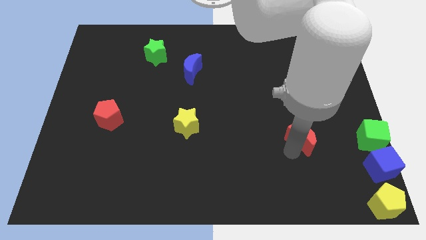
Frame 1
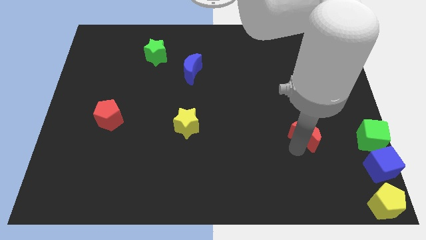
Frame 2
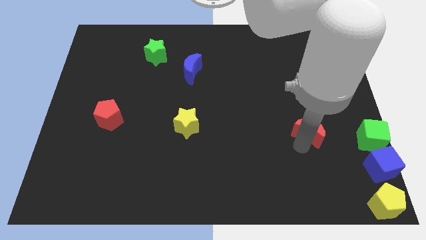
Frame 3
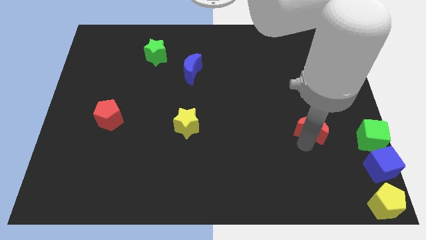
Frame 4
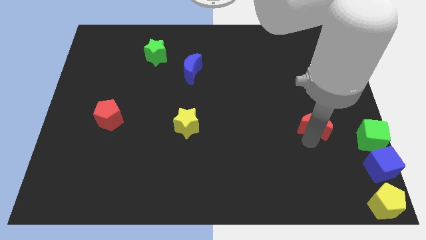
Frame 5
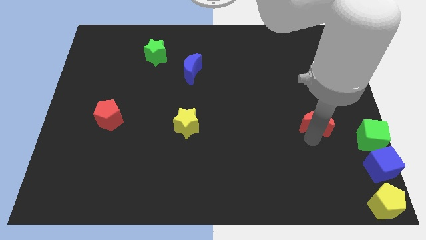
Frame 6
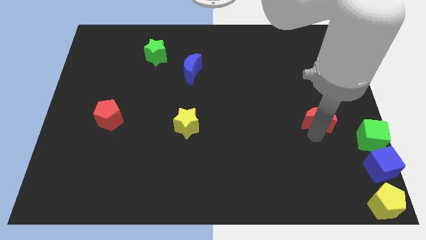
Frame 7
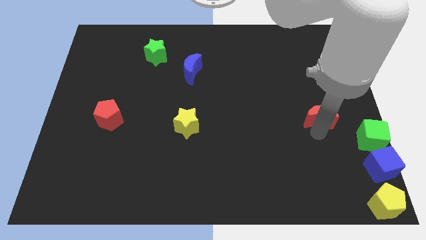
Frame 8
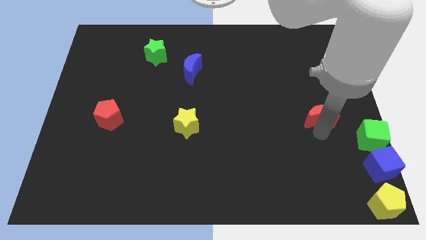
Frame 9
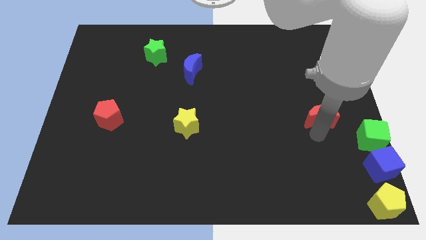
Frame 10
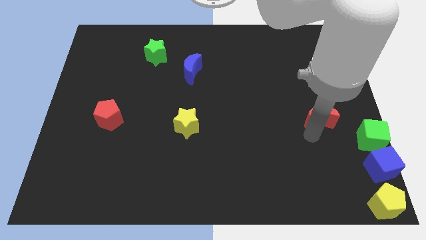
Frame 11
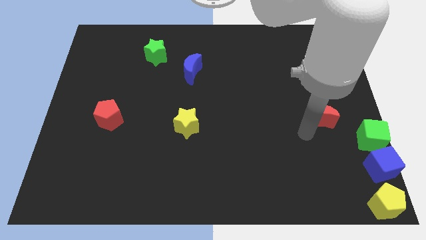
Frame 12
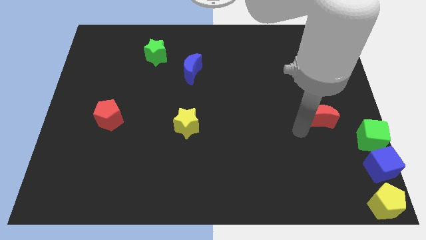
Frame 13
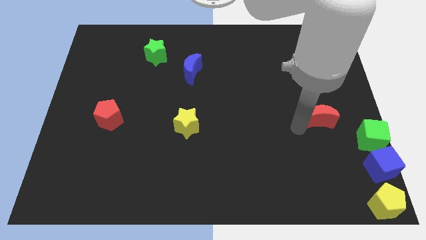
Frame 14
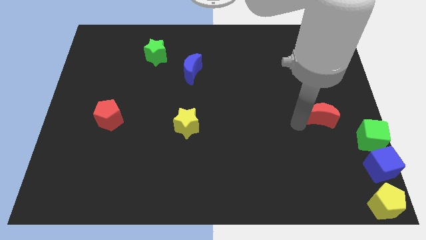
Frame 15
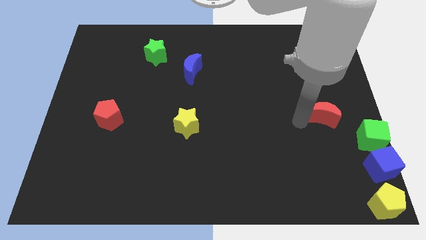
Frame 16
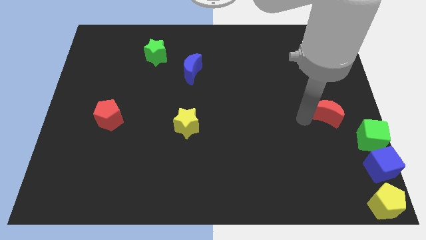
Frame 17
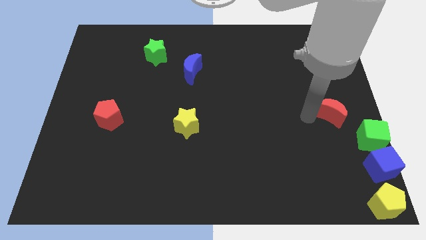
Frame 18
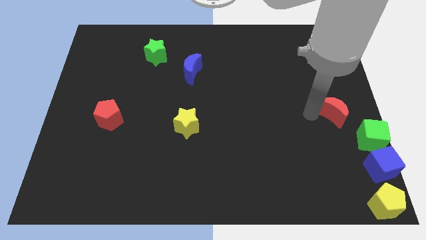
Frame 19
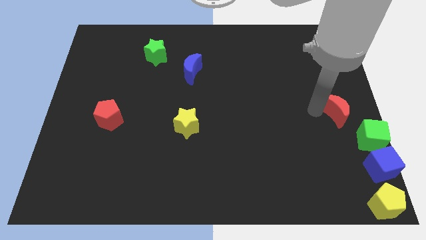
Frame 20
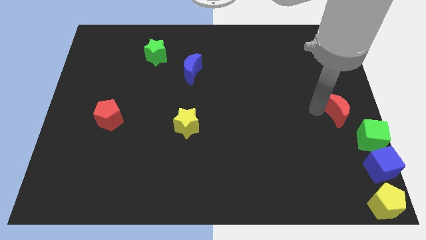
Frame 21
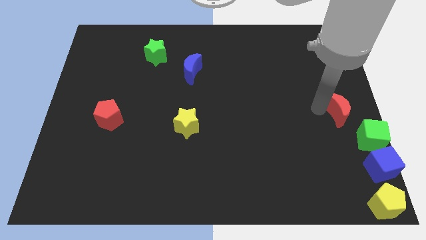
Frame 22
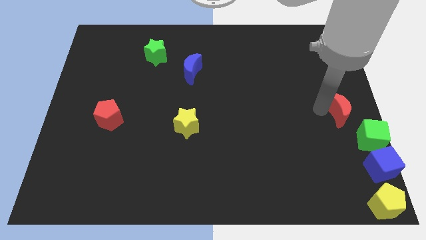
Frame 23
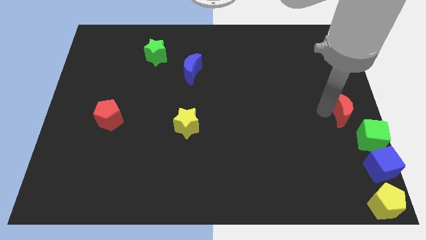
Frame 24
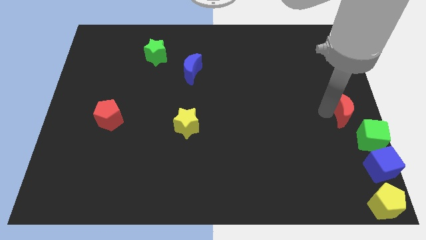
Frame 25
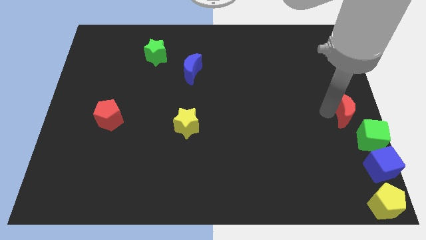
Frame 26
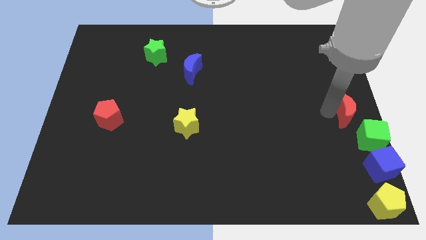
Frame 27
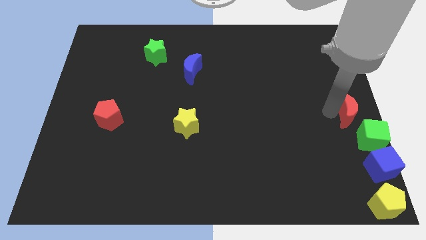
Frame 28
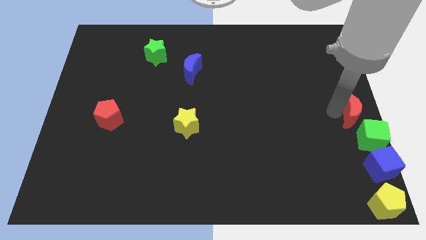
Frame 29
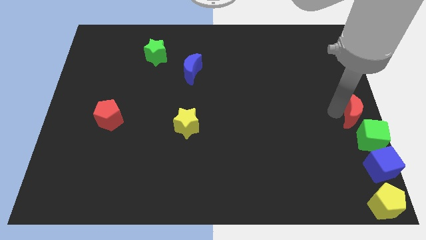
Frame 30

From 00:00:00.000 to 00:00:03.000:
move the red crescent at the top left side of the green cube

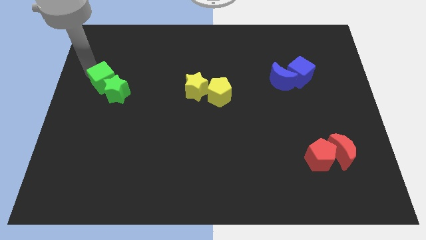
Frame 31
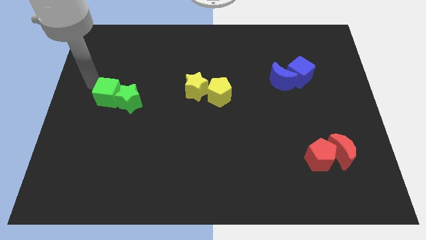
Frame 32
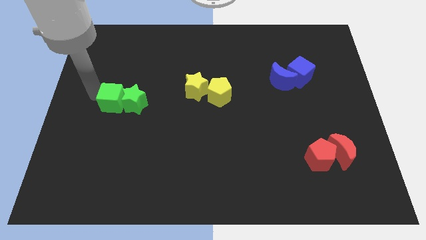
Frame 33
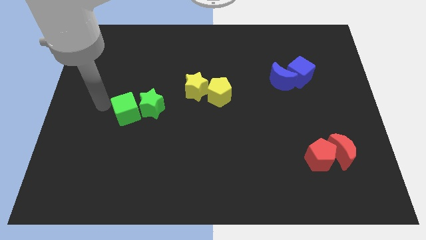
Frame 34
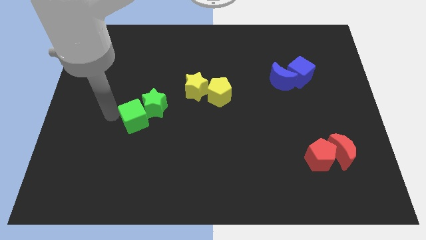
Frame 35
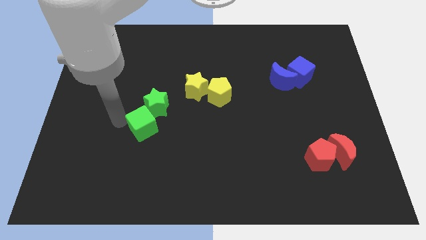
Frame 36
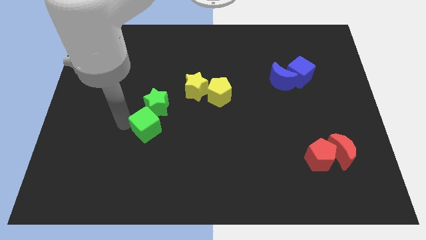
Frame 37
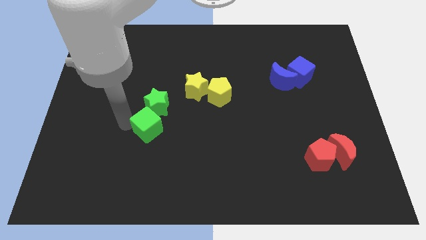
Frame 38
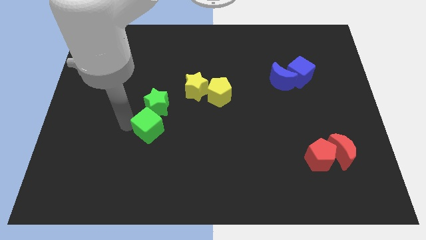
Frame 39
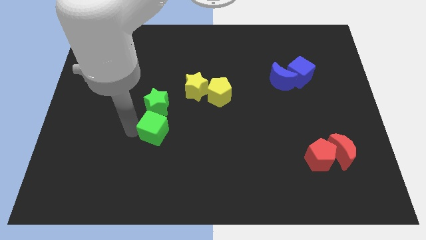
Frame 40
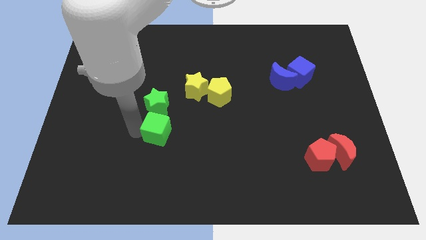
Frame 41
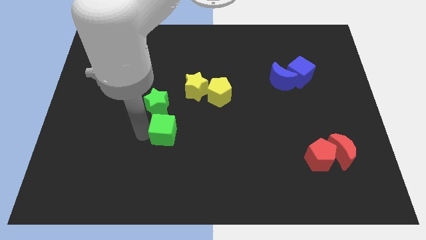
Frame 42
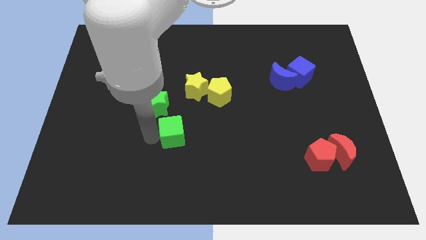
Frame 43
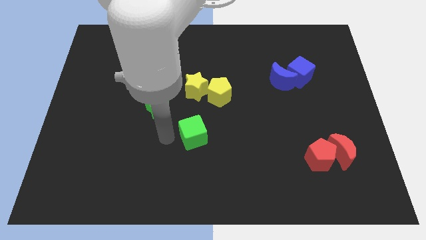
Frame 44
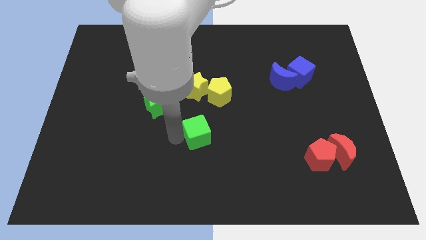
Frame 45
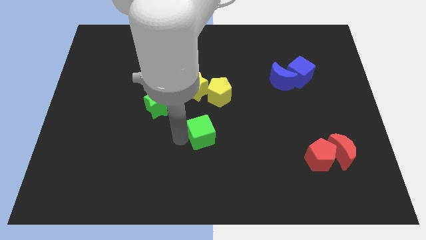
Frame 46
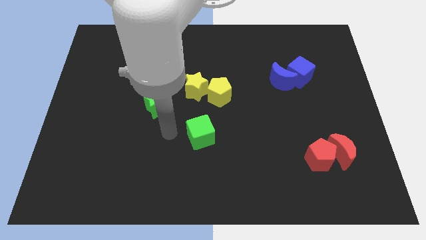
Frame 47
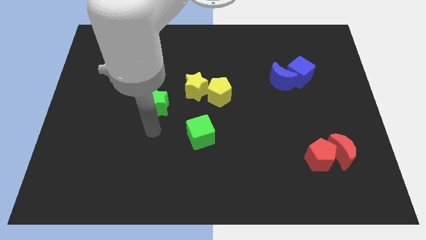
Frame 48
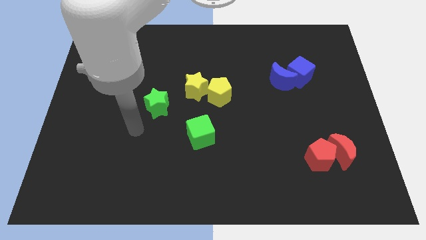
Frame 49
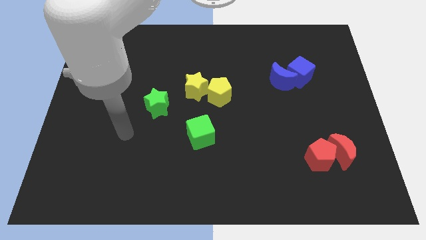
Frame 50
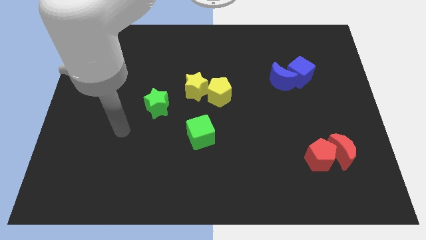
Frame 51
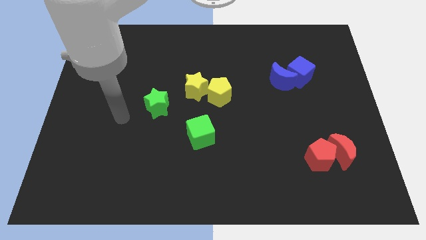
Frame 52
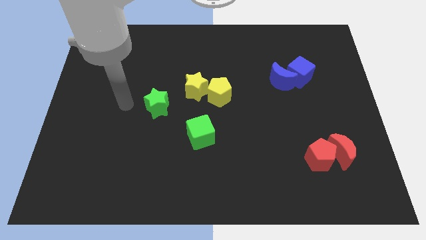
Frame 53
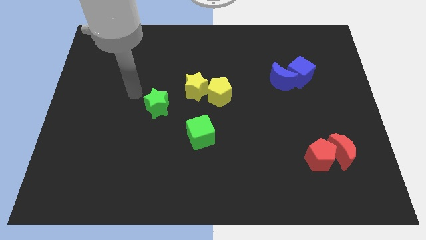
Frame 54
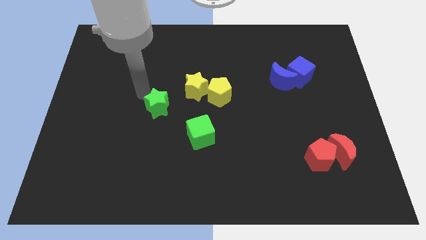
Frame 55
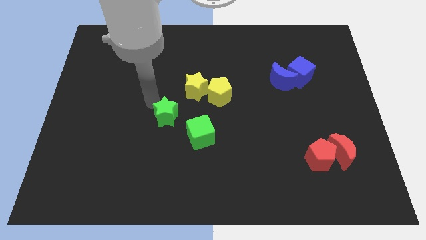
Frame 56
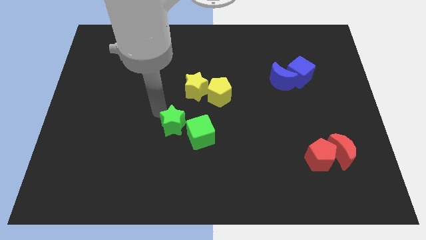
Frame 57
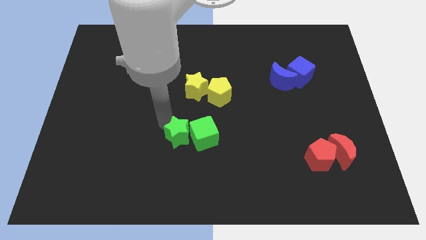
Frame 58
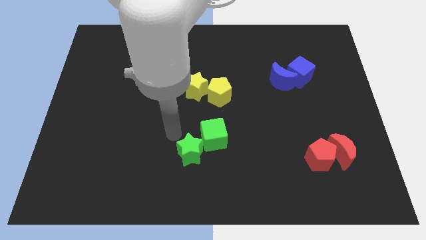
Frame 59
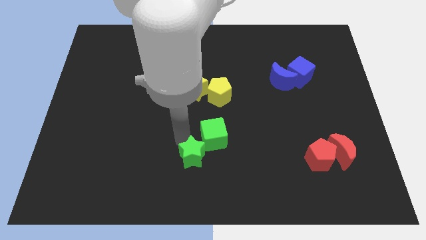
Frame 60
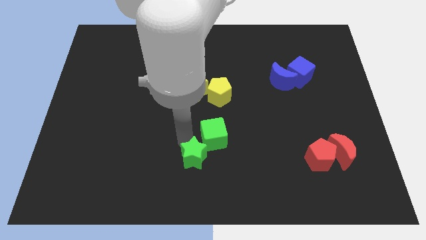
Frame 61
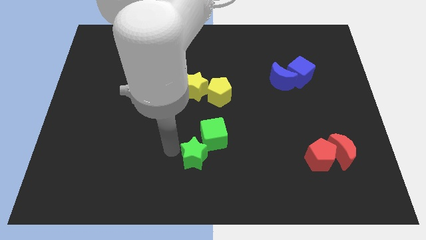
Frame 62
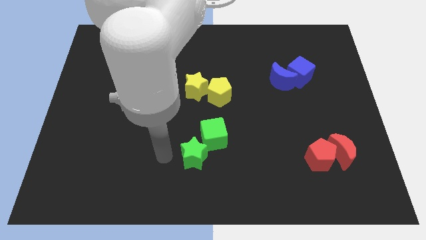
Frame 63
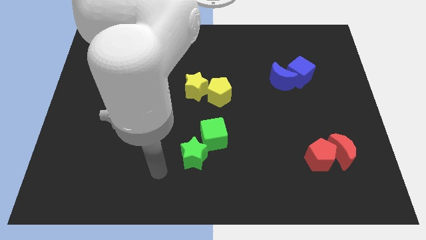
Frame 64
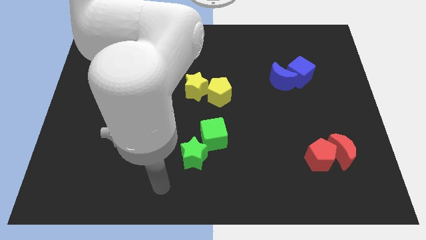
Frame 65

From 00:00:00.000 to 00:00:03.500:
move the green cube and green star to the bottom center of the board

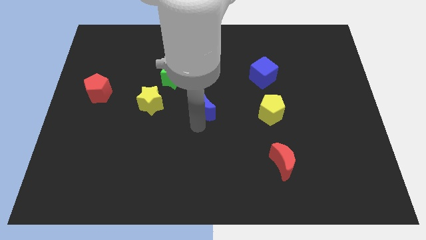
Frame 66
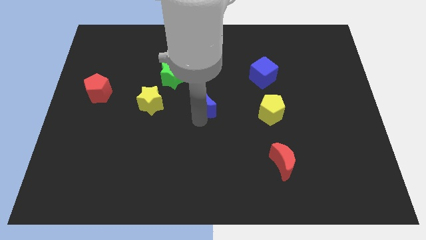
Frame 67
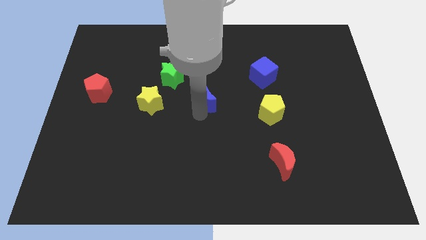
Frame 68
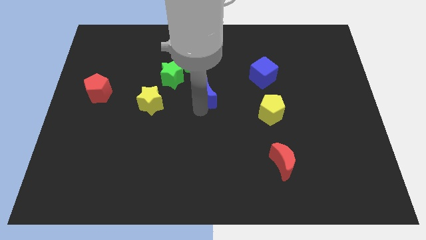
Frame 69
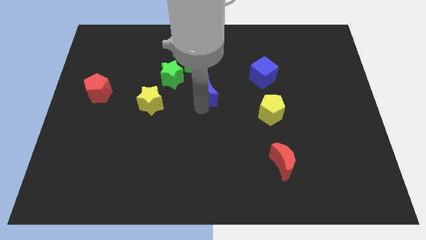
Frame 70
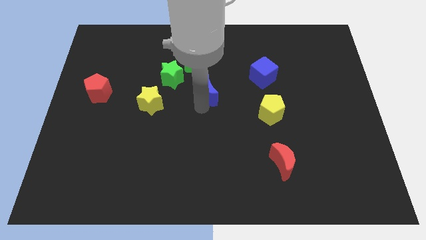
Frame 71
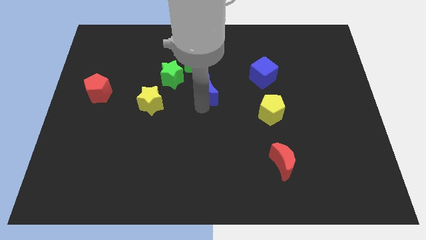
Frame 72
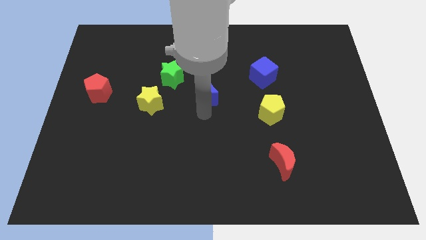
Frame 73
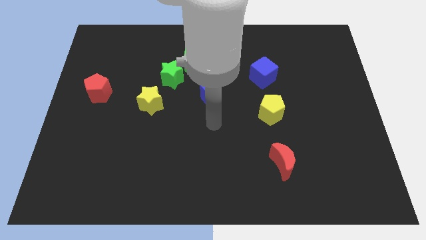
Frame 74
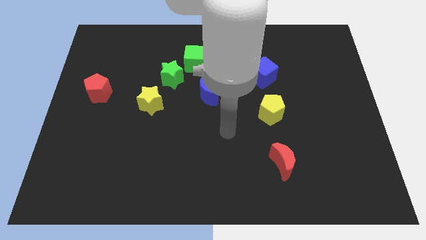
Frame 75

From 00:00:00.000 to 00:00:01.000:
place the blue moon right to the green star

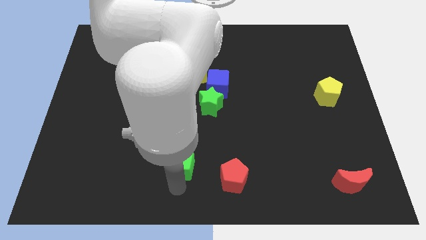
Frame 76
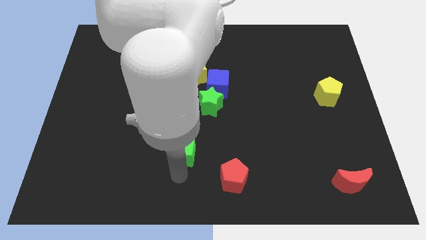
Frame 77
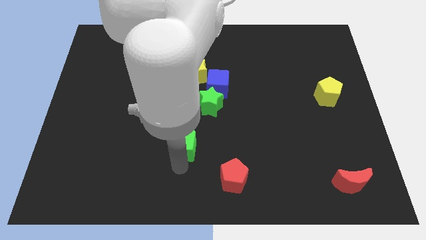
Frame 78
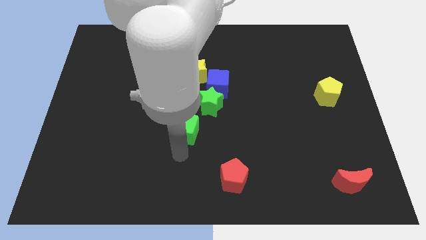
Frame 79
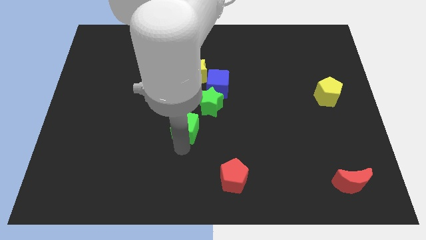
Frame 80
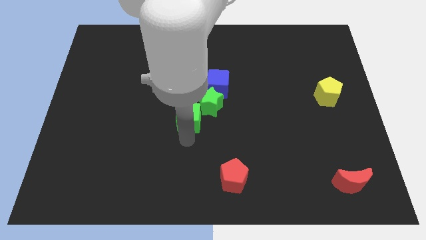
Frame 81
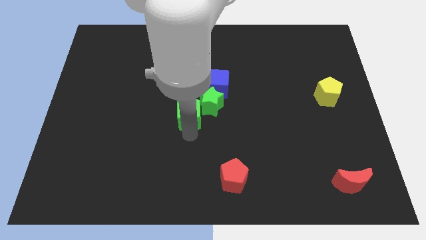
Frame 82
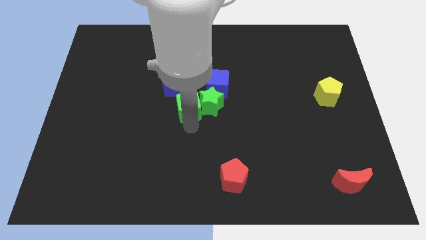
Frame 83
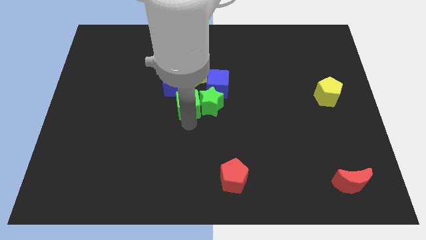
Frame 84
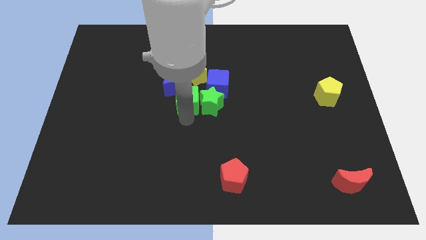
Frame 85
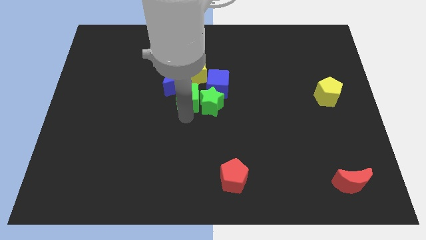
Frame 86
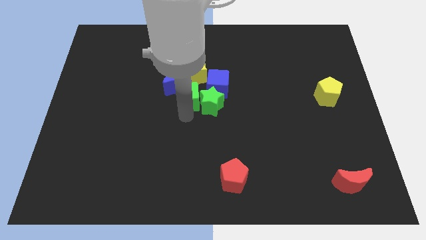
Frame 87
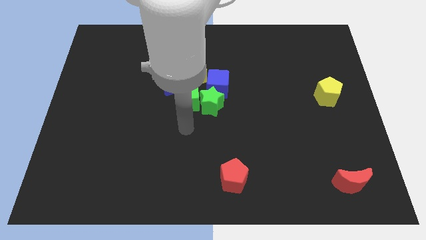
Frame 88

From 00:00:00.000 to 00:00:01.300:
add the green cube to the group of blocks at the center of the board

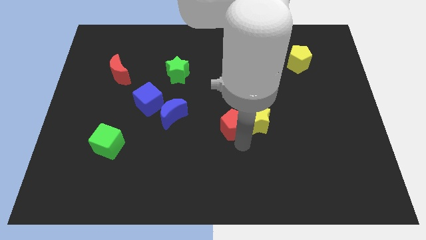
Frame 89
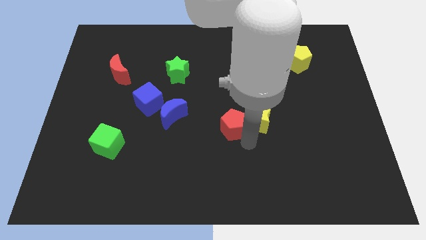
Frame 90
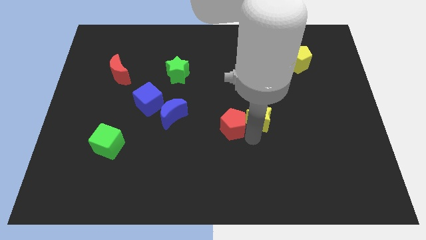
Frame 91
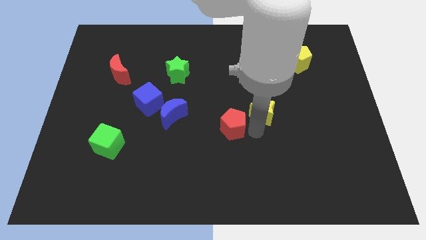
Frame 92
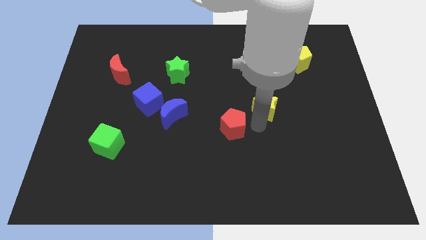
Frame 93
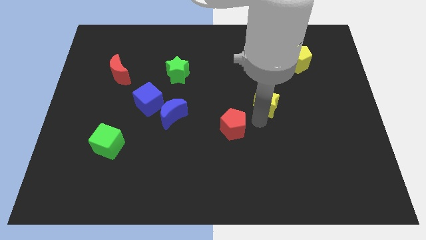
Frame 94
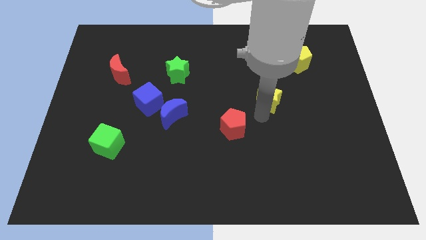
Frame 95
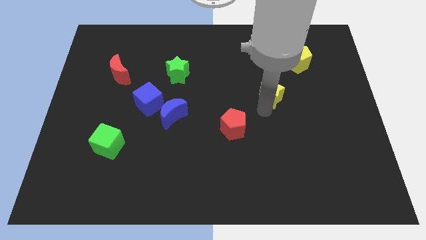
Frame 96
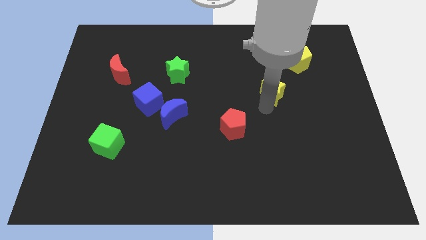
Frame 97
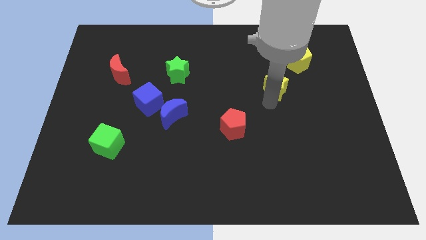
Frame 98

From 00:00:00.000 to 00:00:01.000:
separate yellow star from red pentagon
